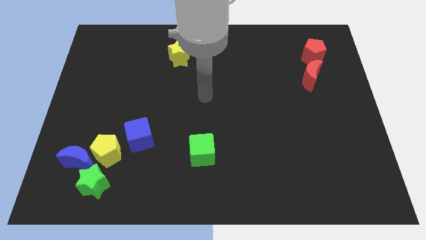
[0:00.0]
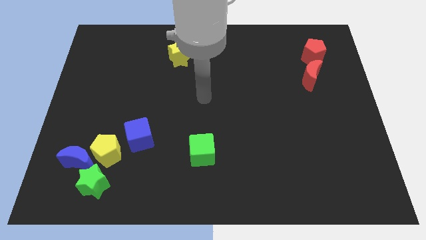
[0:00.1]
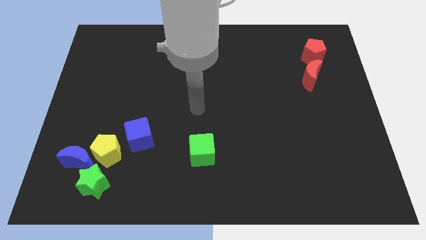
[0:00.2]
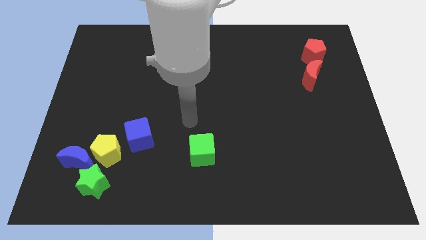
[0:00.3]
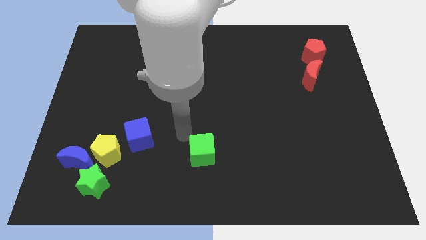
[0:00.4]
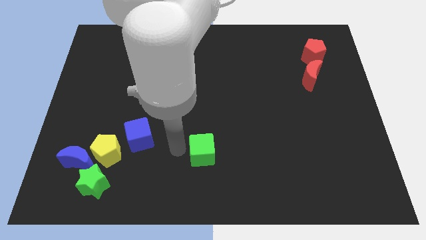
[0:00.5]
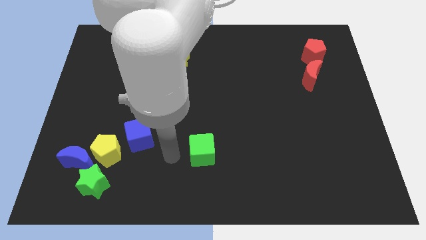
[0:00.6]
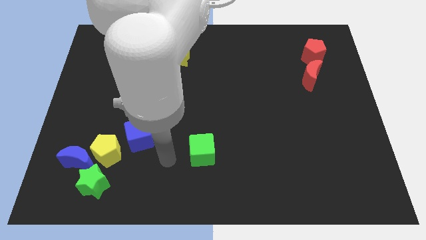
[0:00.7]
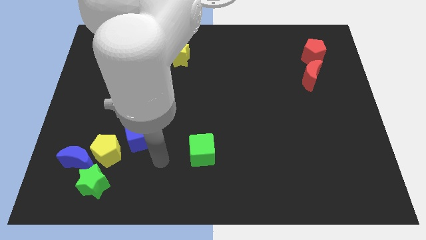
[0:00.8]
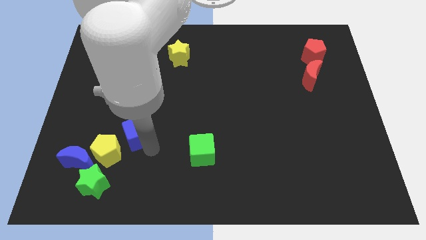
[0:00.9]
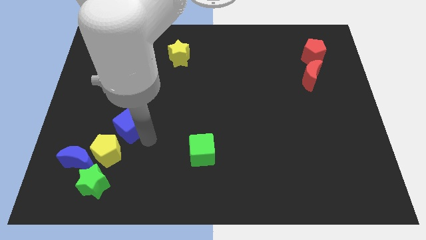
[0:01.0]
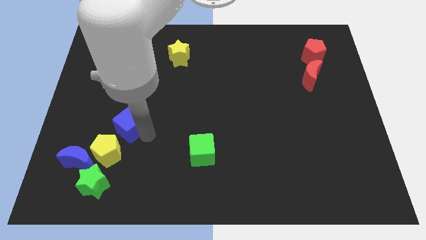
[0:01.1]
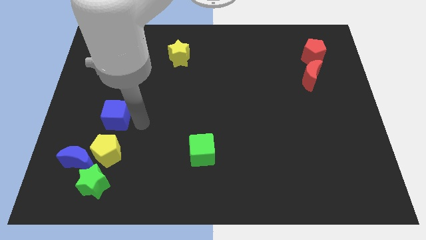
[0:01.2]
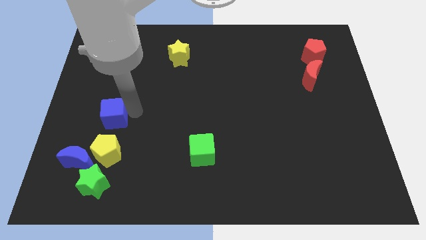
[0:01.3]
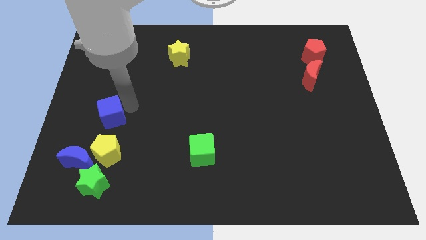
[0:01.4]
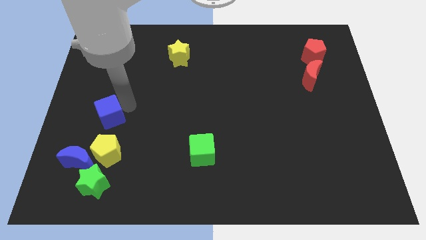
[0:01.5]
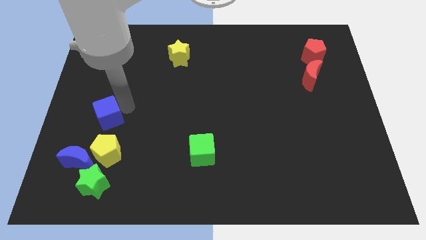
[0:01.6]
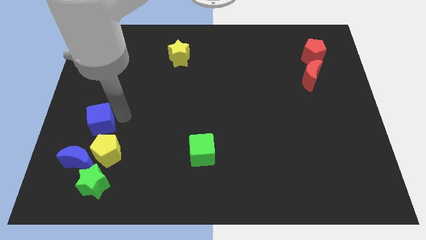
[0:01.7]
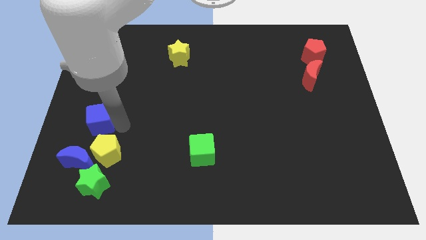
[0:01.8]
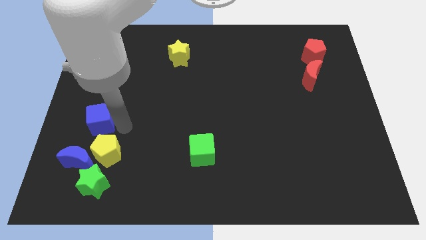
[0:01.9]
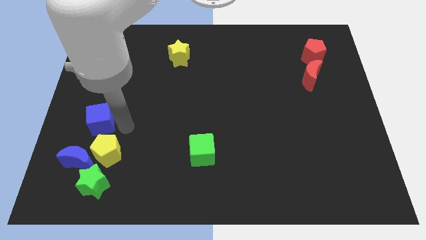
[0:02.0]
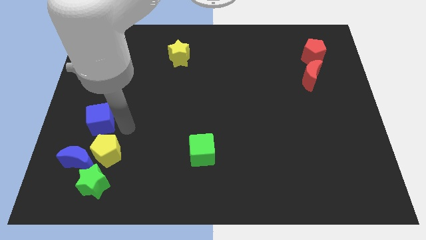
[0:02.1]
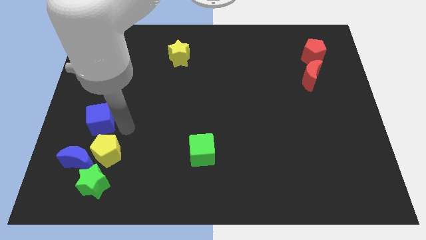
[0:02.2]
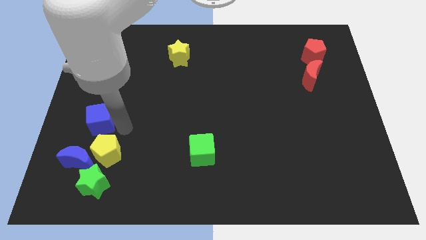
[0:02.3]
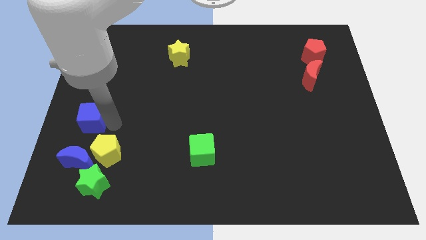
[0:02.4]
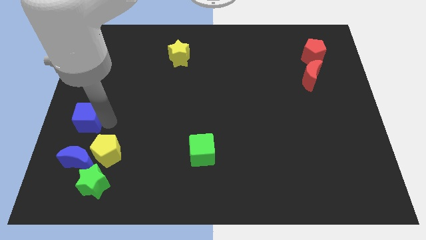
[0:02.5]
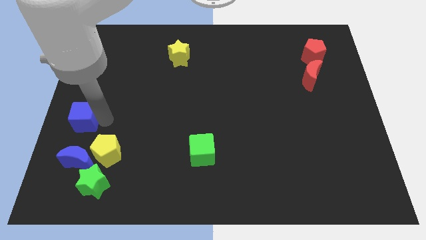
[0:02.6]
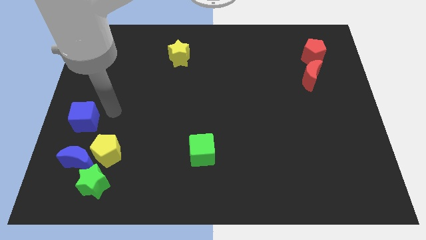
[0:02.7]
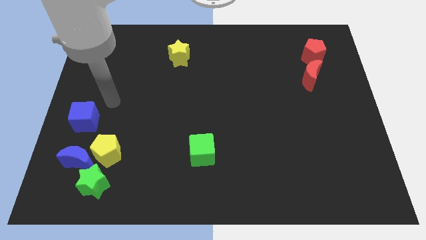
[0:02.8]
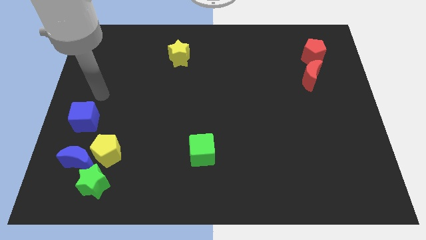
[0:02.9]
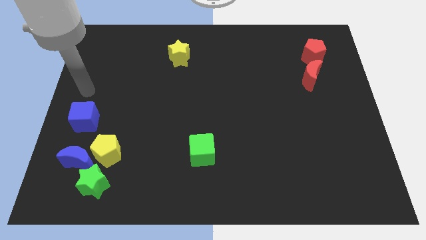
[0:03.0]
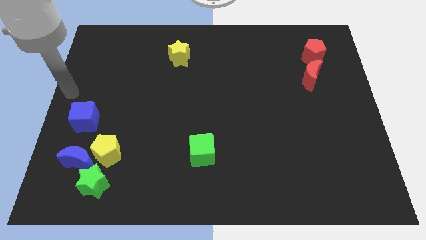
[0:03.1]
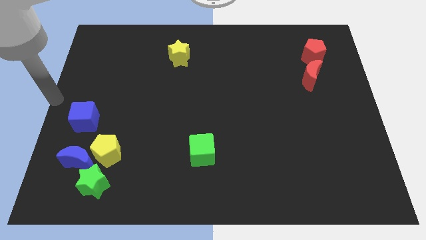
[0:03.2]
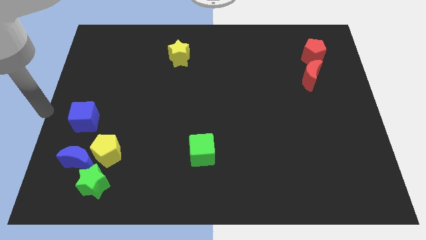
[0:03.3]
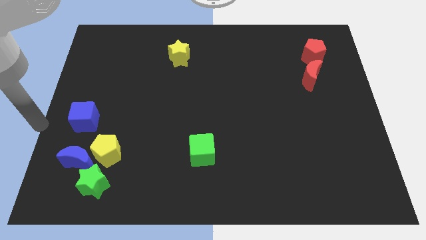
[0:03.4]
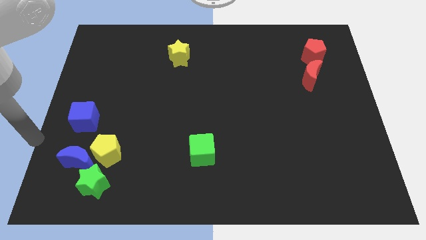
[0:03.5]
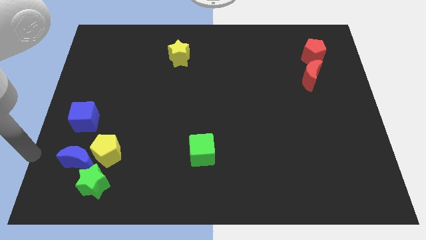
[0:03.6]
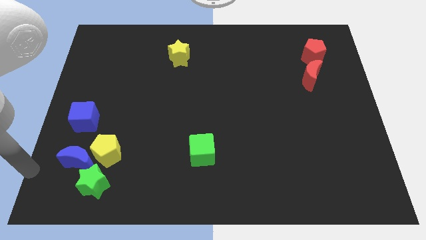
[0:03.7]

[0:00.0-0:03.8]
push blue cube diagonally to the yellow pentagon

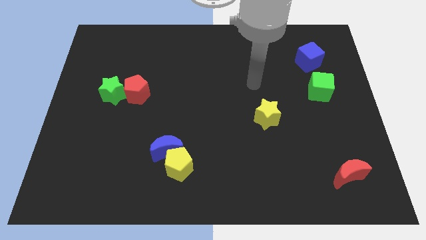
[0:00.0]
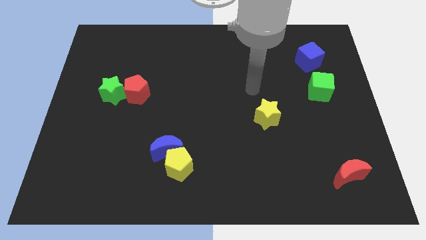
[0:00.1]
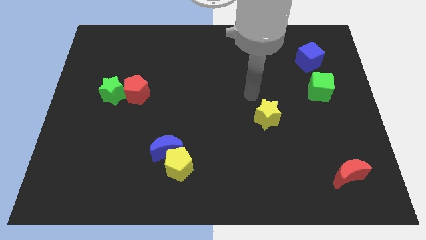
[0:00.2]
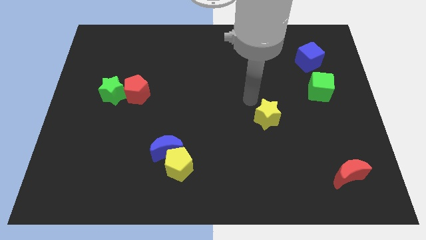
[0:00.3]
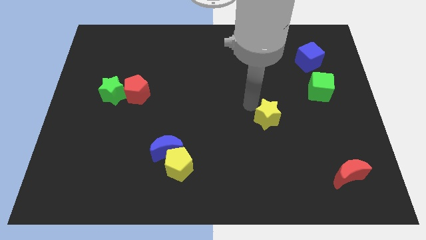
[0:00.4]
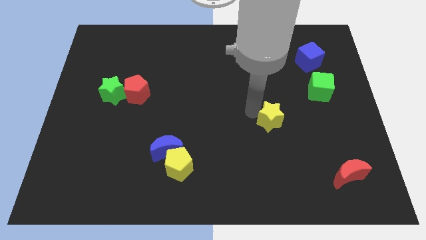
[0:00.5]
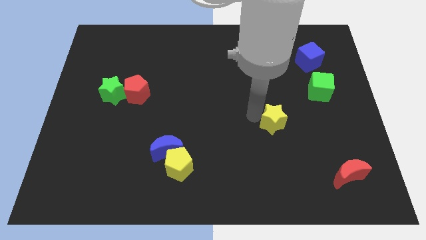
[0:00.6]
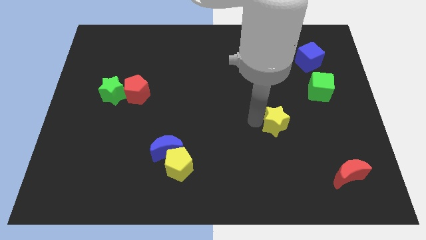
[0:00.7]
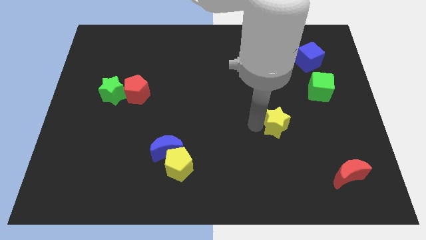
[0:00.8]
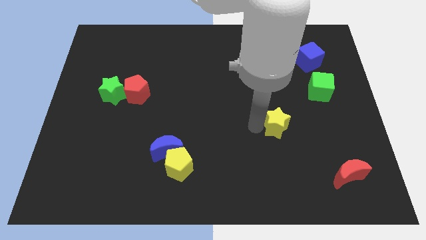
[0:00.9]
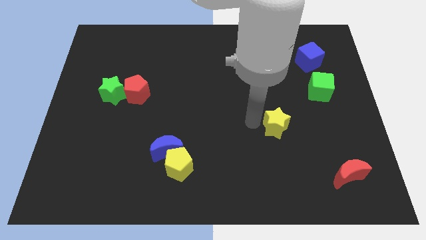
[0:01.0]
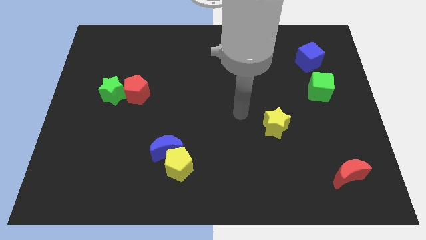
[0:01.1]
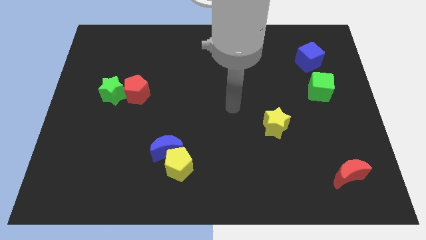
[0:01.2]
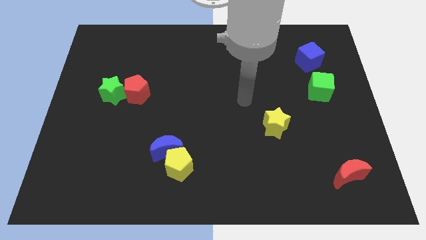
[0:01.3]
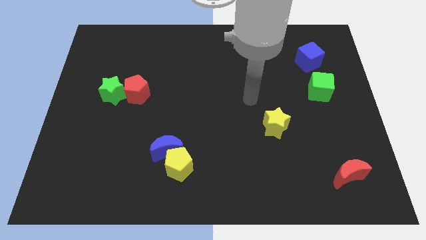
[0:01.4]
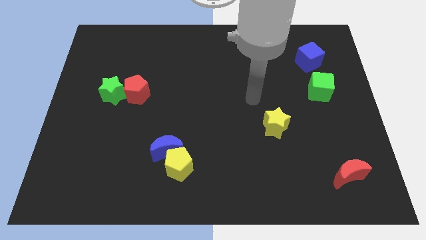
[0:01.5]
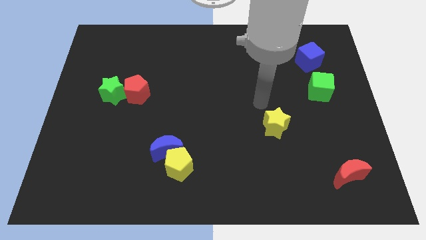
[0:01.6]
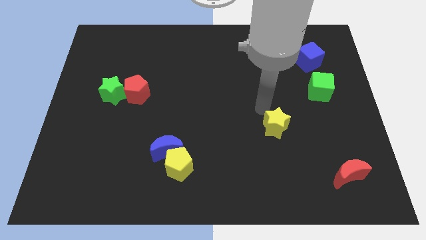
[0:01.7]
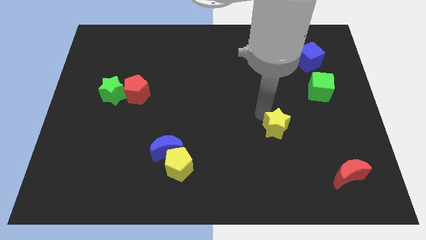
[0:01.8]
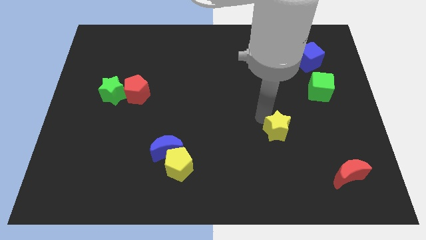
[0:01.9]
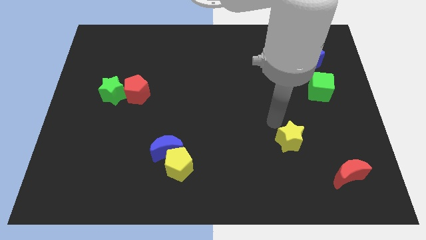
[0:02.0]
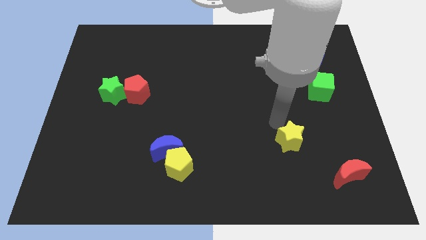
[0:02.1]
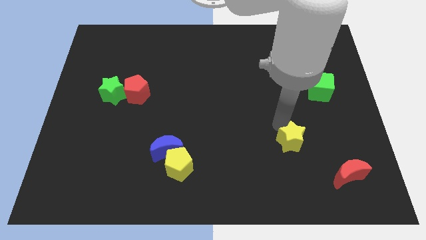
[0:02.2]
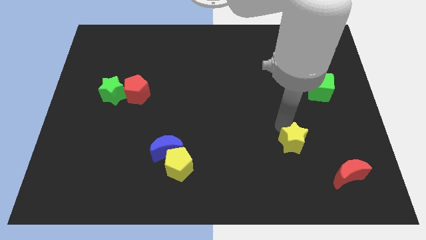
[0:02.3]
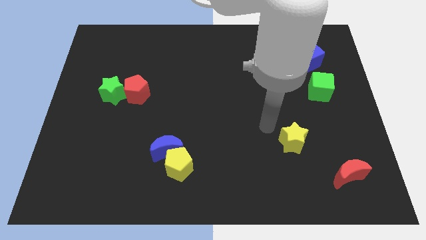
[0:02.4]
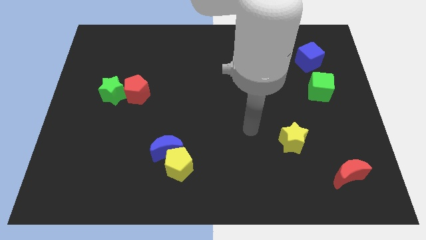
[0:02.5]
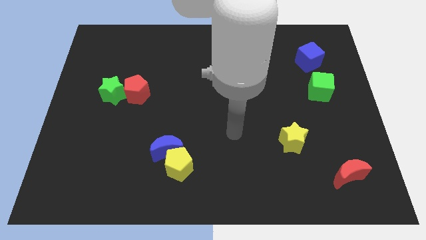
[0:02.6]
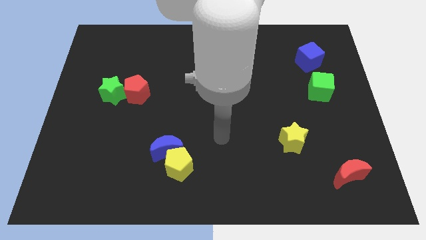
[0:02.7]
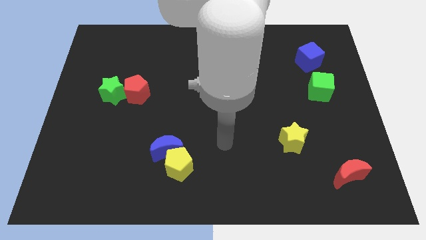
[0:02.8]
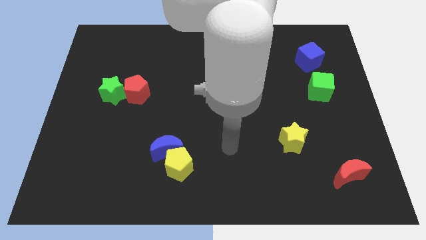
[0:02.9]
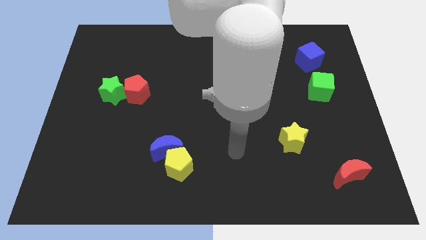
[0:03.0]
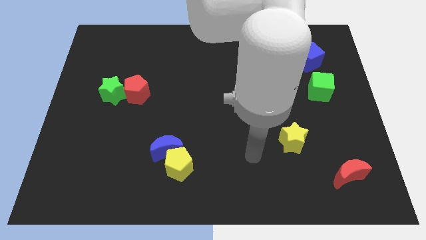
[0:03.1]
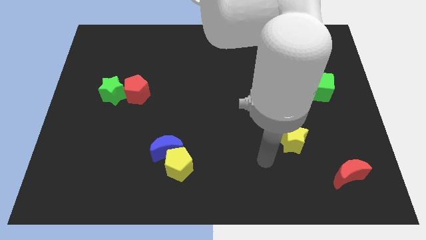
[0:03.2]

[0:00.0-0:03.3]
push yellow star to the right of blue moon

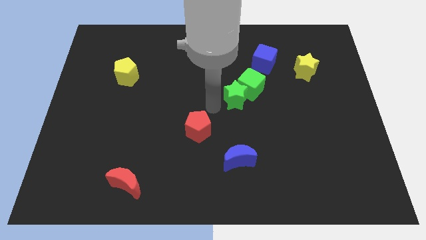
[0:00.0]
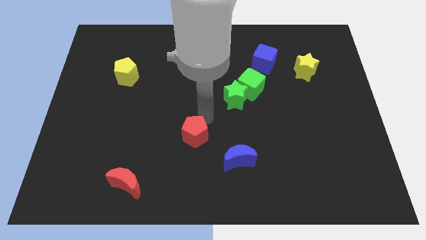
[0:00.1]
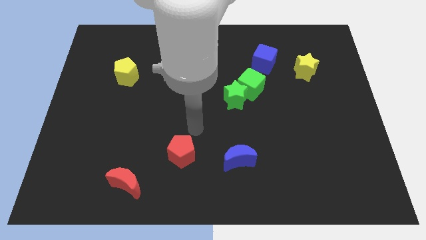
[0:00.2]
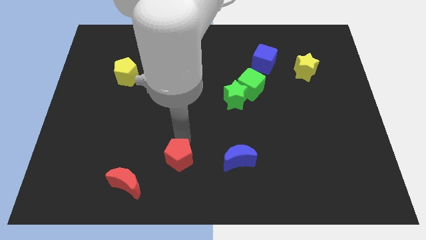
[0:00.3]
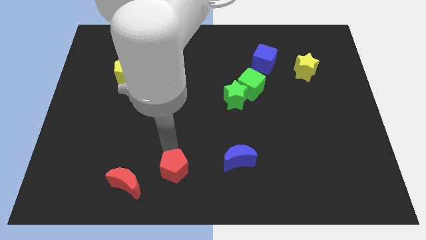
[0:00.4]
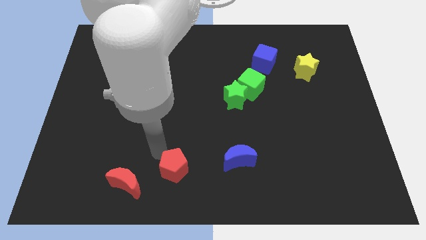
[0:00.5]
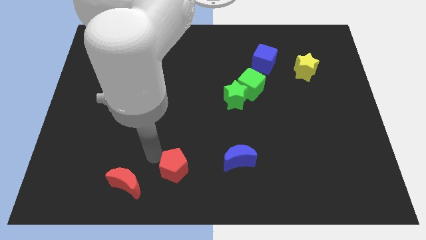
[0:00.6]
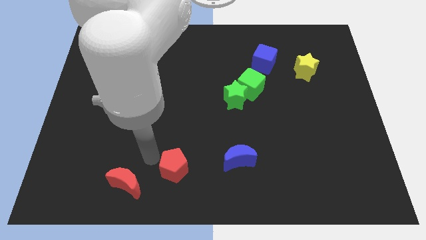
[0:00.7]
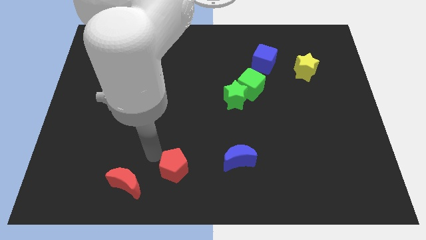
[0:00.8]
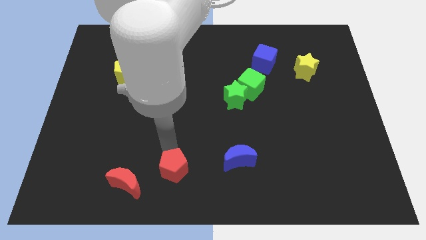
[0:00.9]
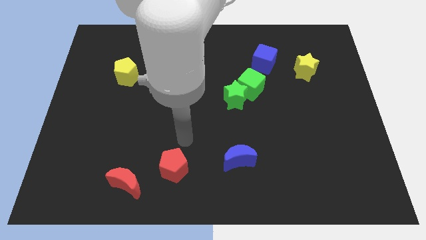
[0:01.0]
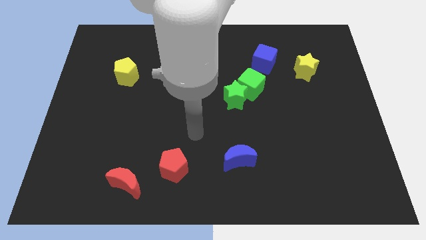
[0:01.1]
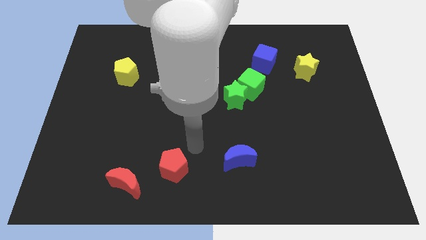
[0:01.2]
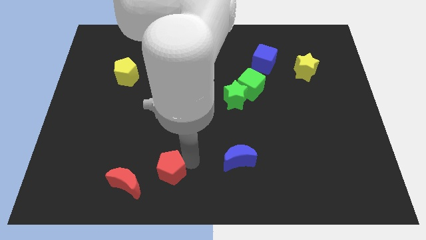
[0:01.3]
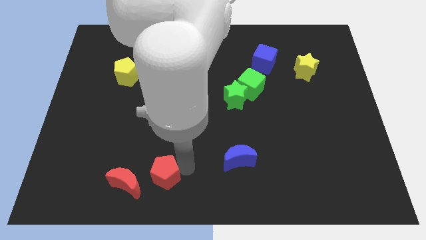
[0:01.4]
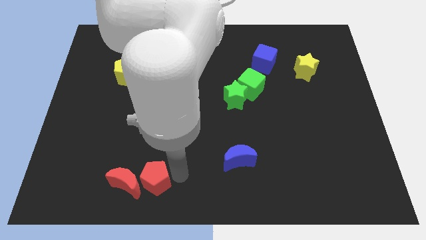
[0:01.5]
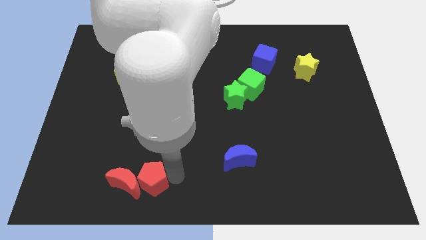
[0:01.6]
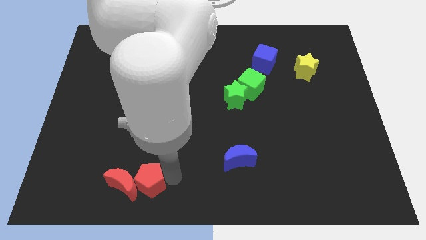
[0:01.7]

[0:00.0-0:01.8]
move the red pentagon to the right of the red crescent

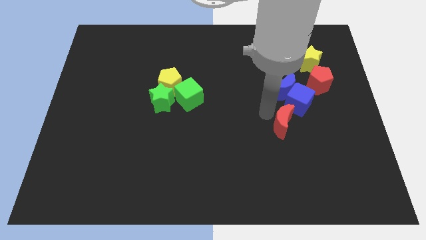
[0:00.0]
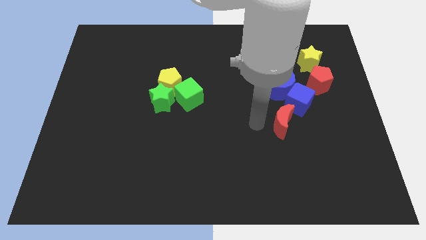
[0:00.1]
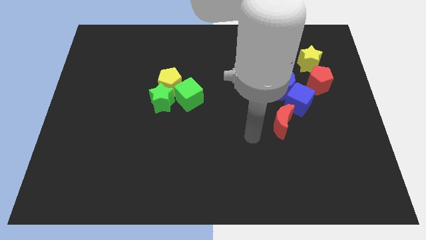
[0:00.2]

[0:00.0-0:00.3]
move the arm diagonally down
